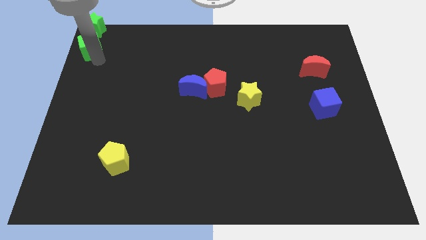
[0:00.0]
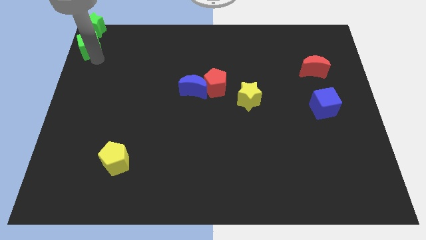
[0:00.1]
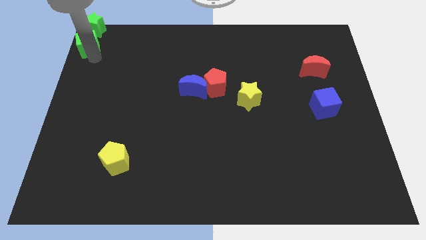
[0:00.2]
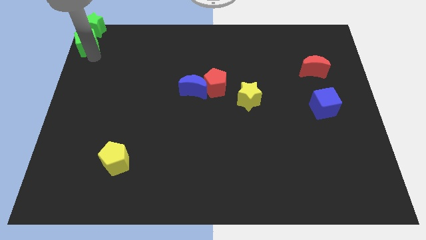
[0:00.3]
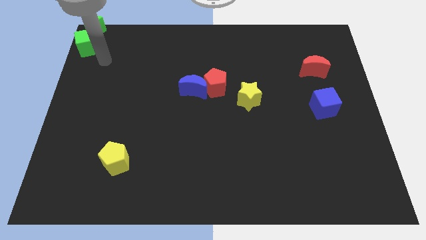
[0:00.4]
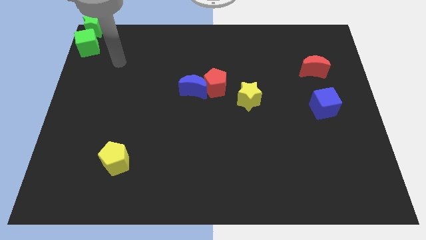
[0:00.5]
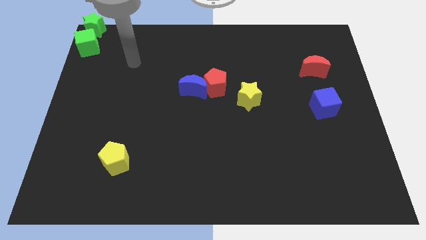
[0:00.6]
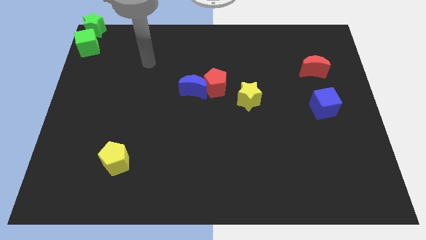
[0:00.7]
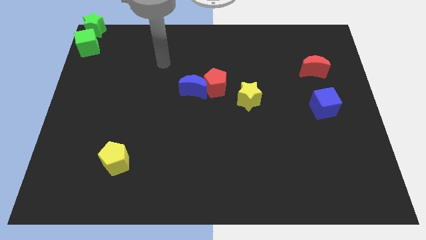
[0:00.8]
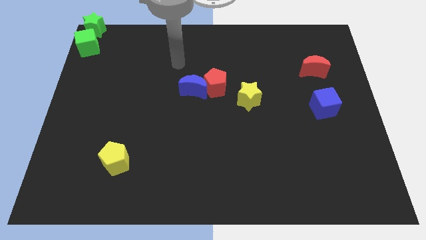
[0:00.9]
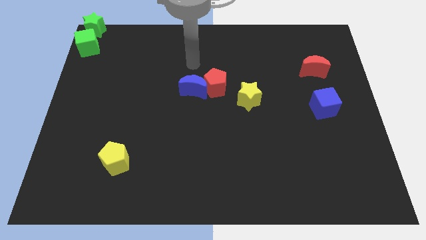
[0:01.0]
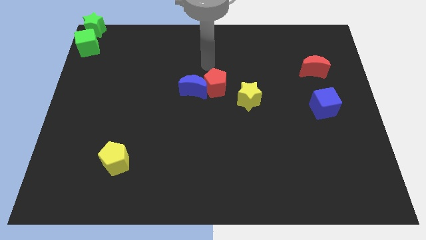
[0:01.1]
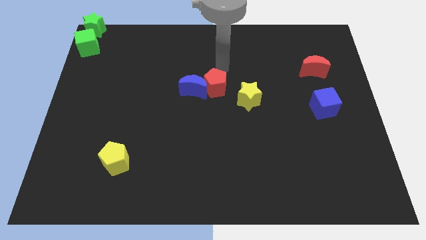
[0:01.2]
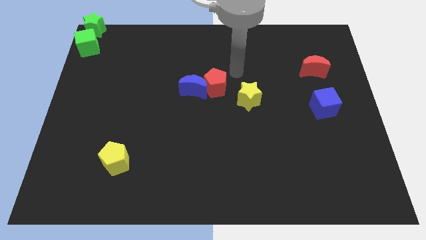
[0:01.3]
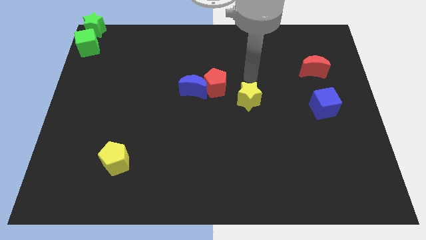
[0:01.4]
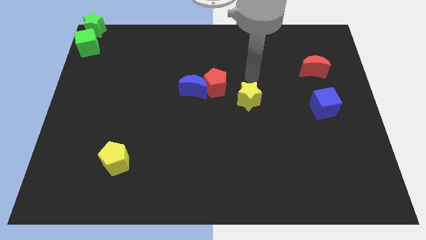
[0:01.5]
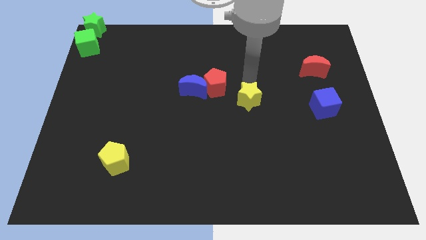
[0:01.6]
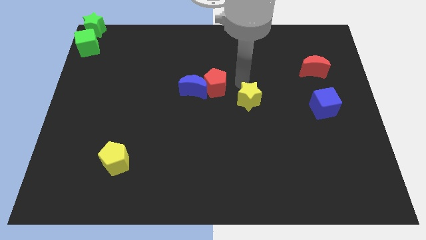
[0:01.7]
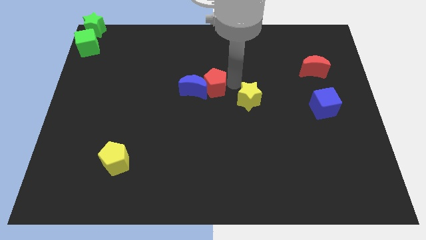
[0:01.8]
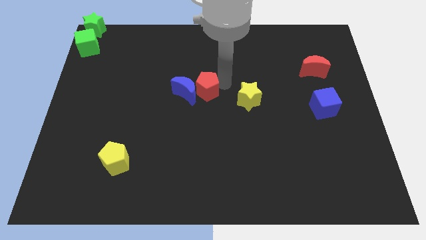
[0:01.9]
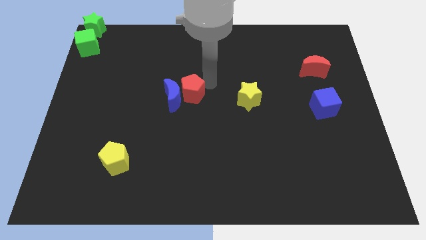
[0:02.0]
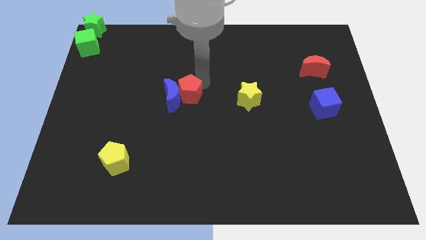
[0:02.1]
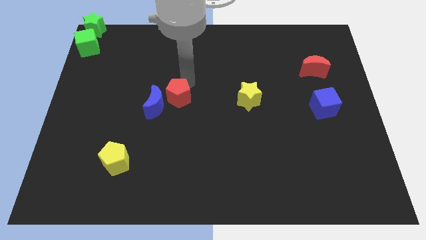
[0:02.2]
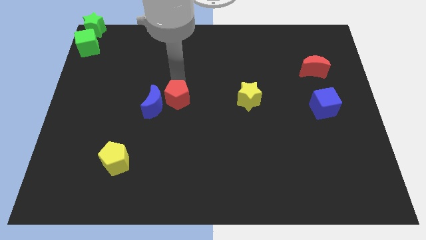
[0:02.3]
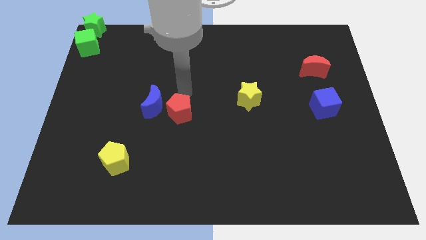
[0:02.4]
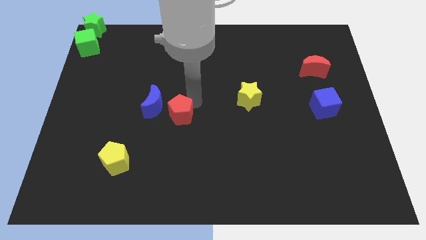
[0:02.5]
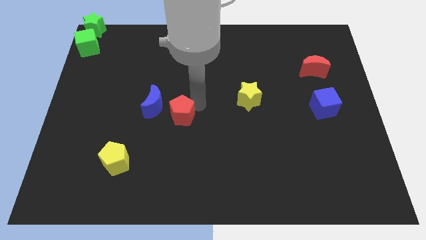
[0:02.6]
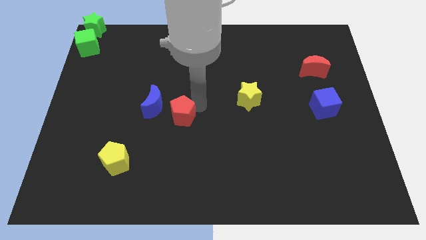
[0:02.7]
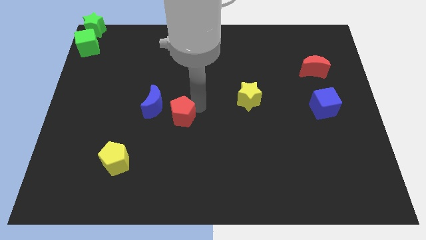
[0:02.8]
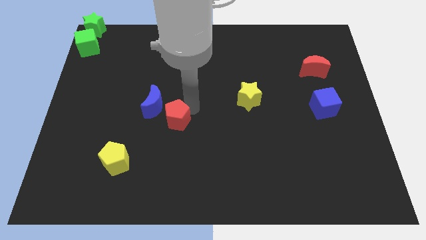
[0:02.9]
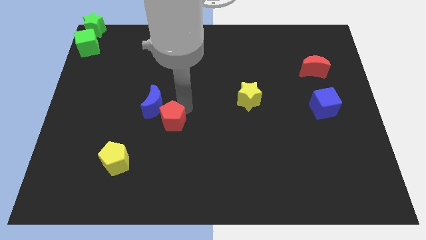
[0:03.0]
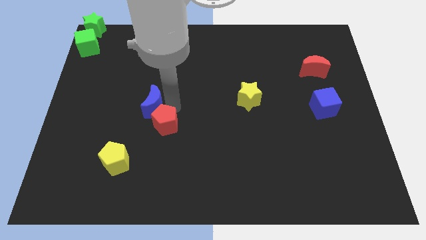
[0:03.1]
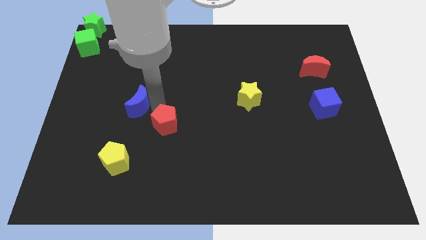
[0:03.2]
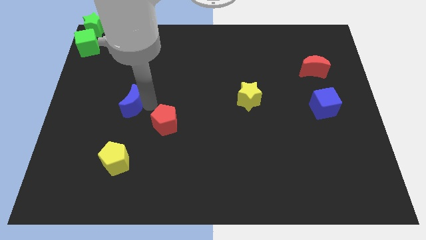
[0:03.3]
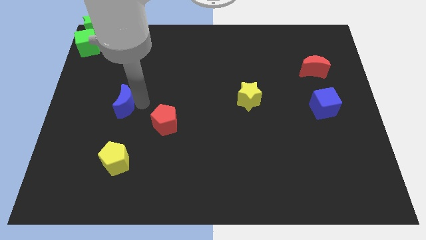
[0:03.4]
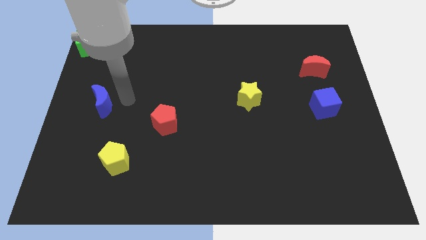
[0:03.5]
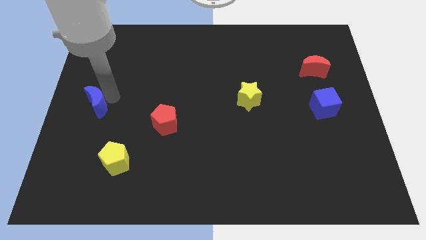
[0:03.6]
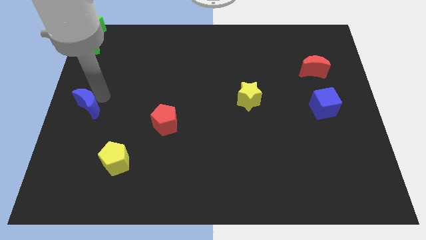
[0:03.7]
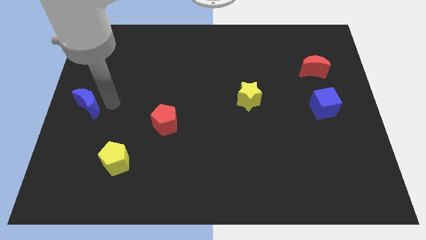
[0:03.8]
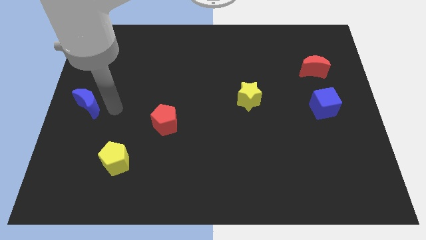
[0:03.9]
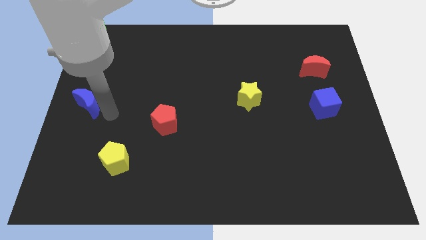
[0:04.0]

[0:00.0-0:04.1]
separate the blue moon and red pentagon

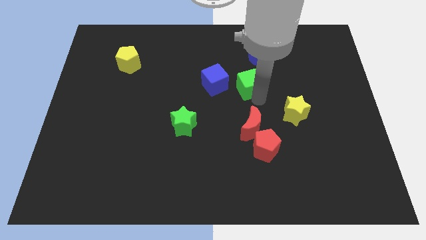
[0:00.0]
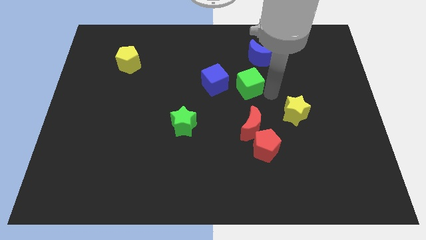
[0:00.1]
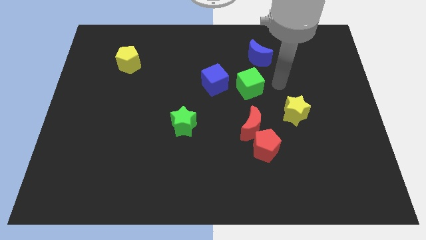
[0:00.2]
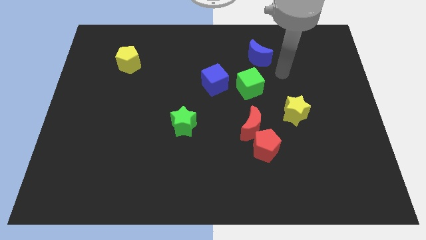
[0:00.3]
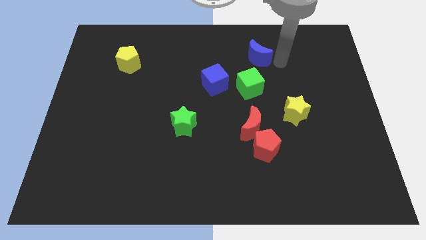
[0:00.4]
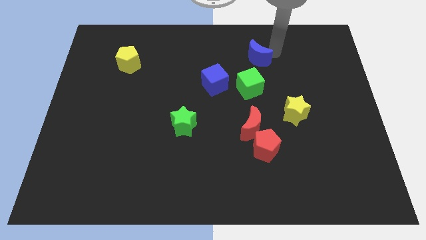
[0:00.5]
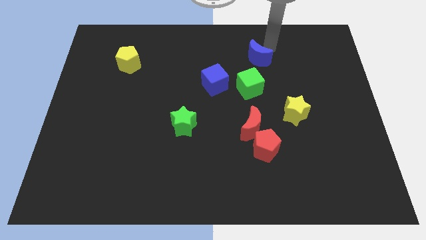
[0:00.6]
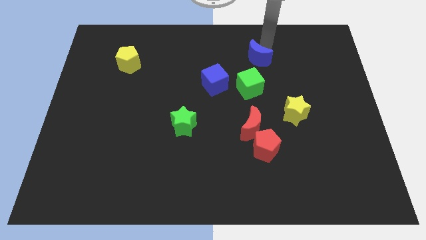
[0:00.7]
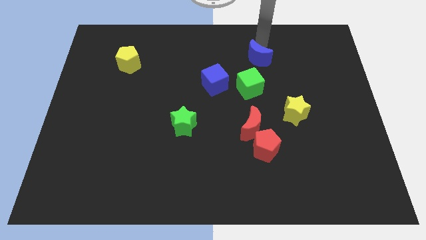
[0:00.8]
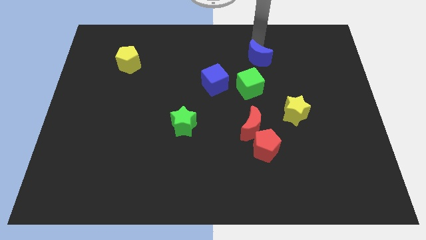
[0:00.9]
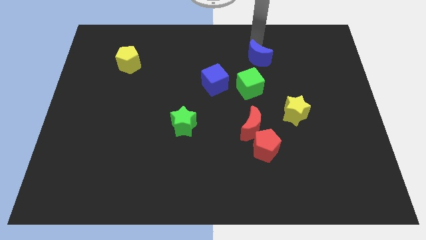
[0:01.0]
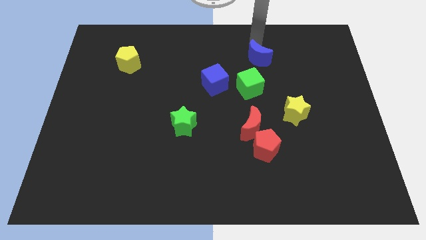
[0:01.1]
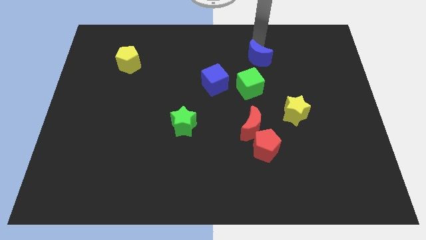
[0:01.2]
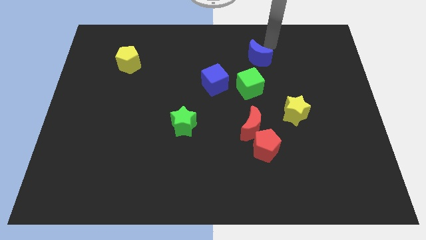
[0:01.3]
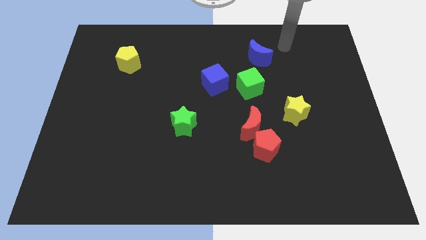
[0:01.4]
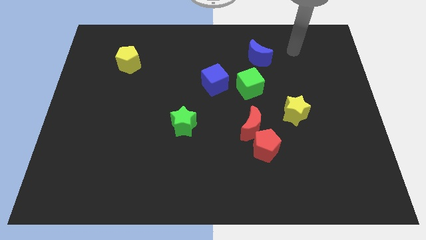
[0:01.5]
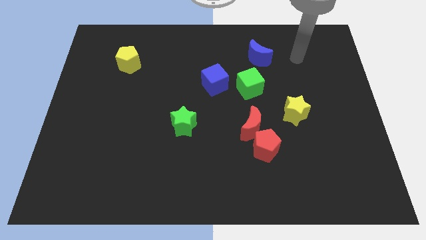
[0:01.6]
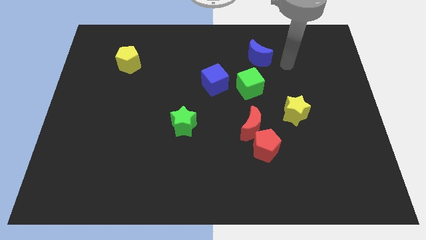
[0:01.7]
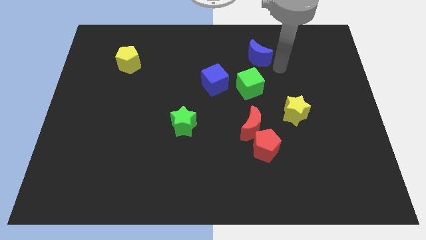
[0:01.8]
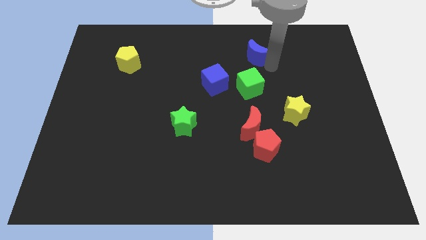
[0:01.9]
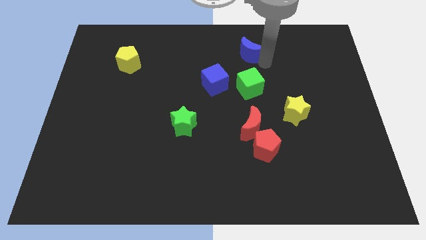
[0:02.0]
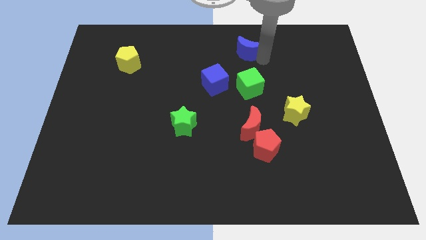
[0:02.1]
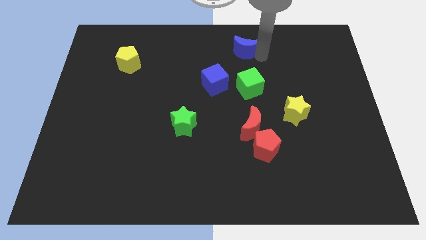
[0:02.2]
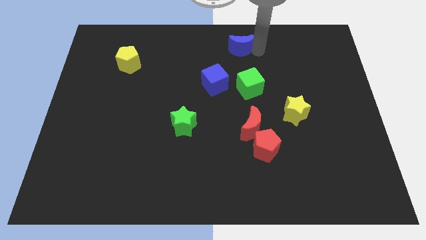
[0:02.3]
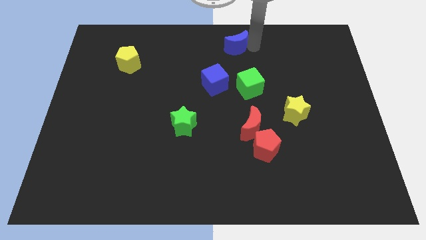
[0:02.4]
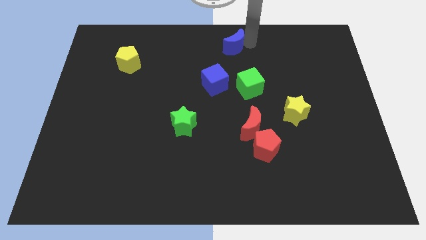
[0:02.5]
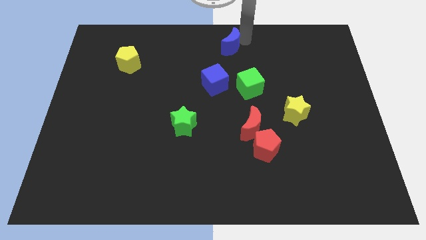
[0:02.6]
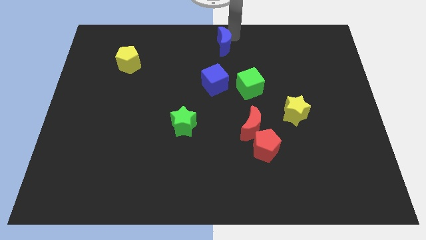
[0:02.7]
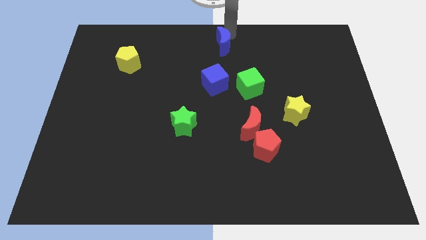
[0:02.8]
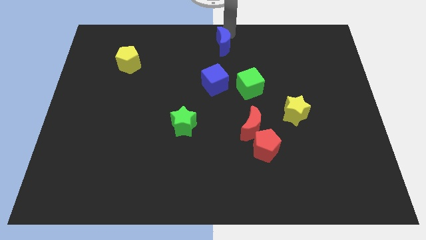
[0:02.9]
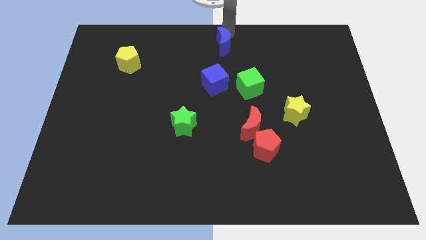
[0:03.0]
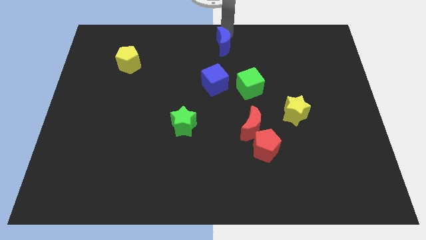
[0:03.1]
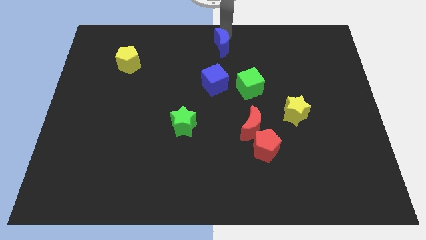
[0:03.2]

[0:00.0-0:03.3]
move the blue moon to the top side of the blue cube

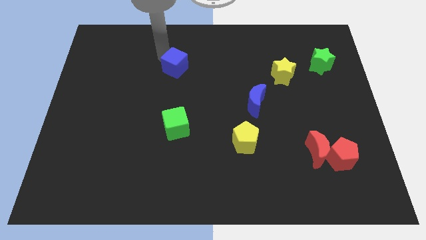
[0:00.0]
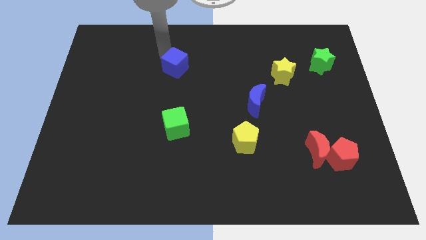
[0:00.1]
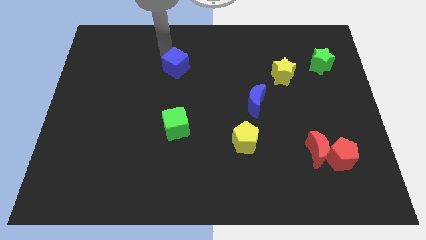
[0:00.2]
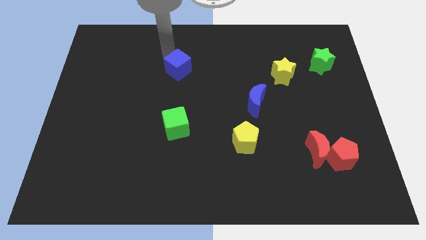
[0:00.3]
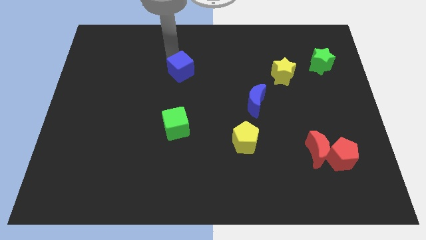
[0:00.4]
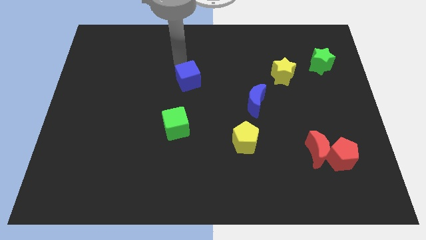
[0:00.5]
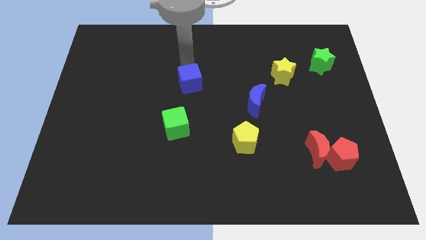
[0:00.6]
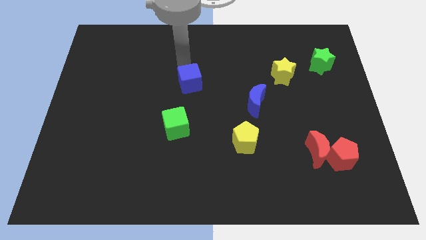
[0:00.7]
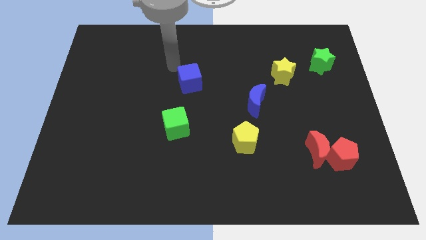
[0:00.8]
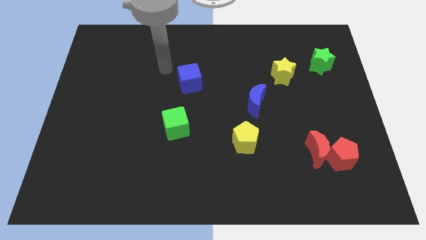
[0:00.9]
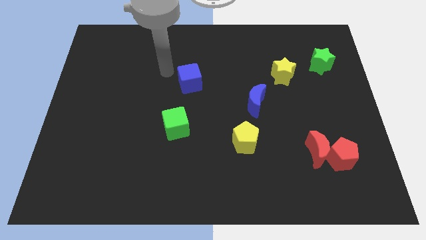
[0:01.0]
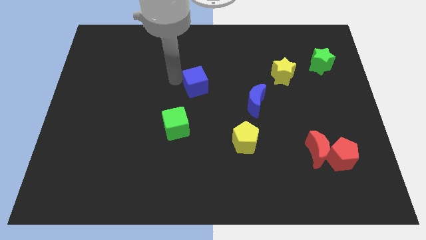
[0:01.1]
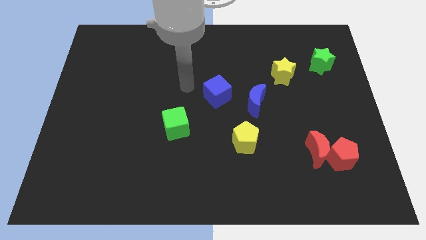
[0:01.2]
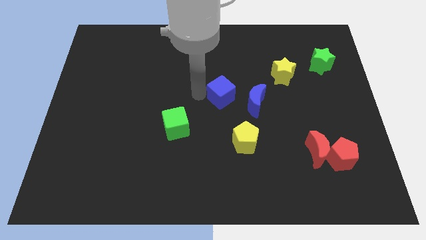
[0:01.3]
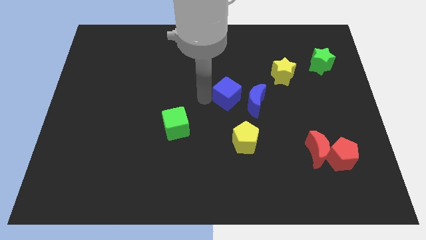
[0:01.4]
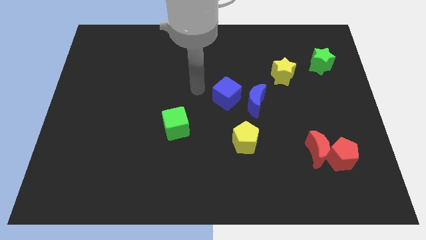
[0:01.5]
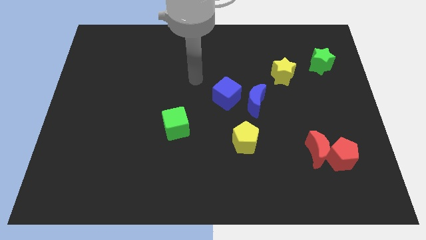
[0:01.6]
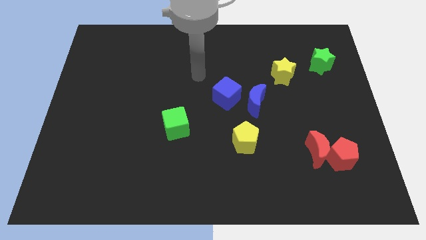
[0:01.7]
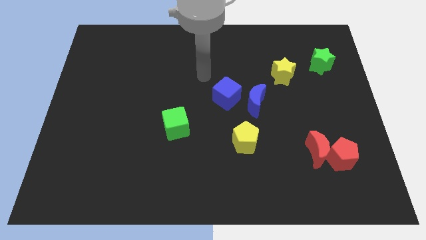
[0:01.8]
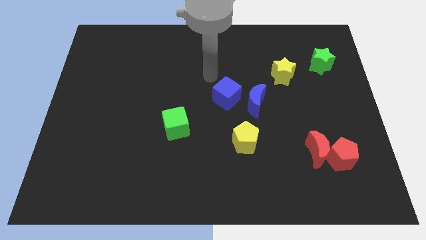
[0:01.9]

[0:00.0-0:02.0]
drag the blue cube towards the blue moon
